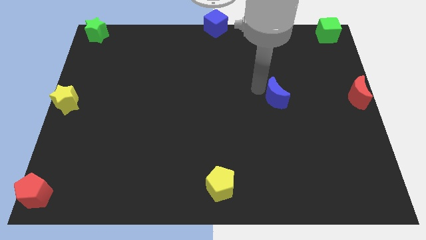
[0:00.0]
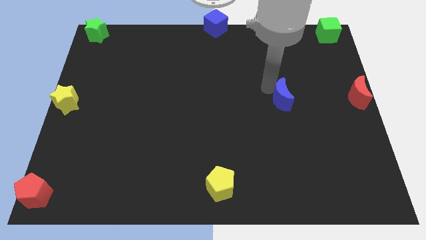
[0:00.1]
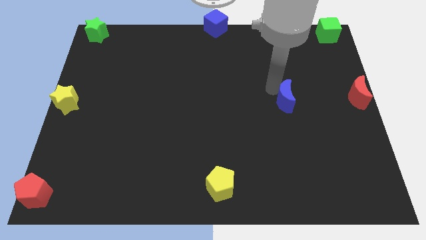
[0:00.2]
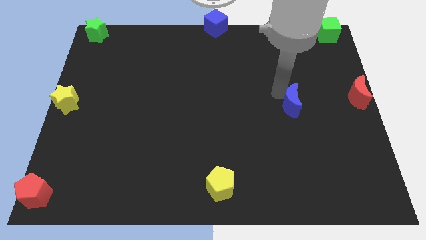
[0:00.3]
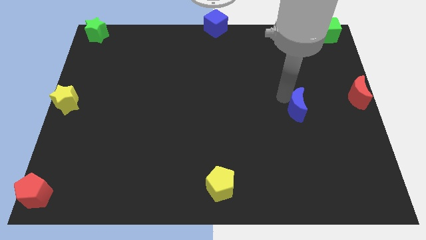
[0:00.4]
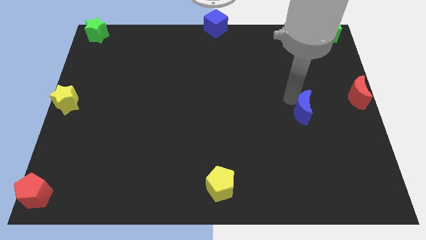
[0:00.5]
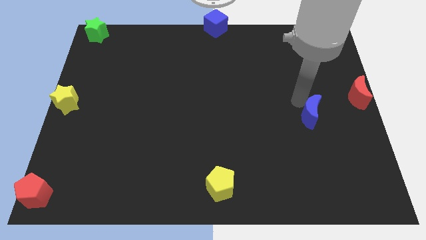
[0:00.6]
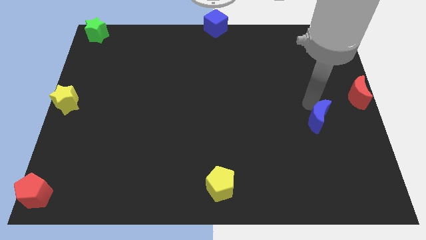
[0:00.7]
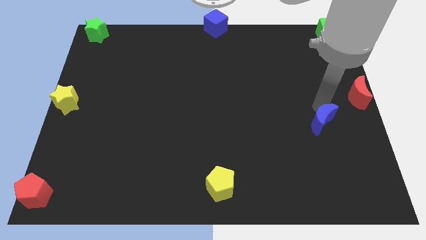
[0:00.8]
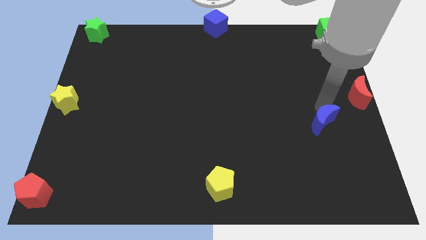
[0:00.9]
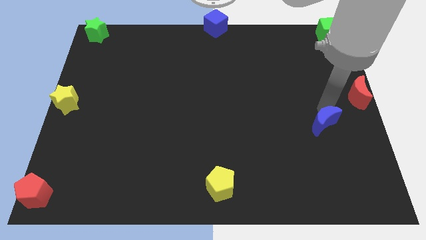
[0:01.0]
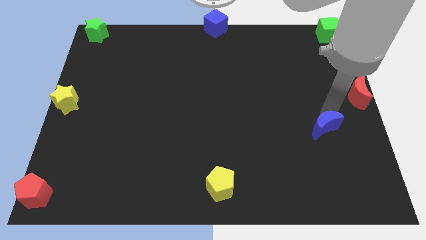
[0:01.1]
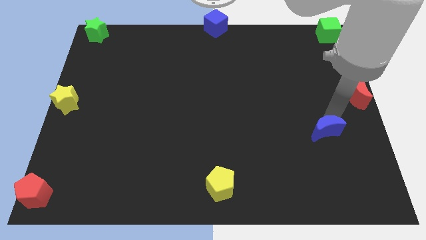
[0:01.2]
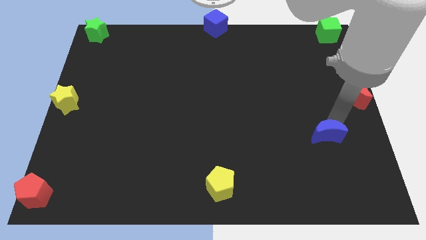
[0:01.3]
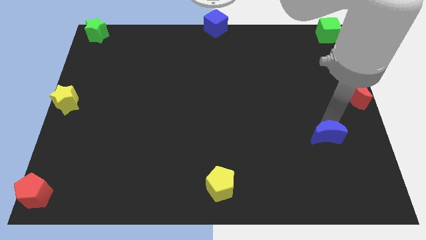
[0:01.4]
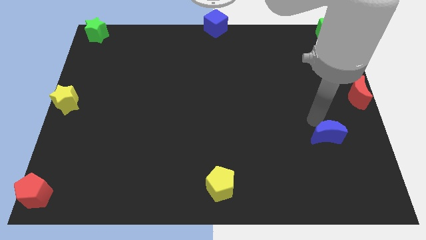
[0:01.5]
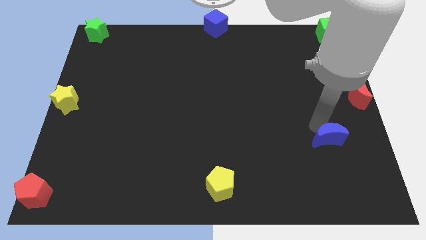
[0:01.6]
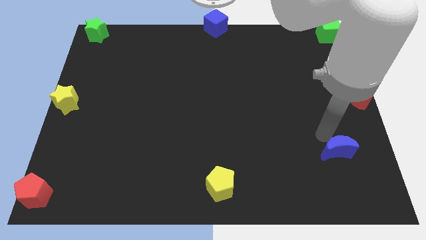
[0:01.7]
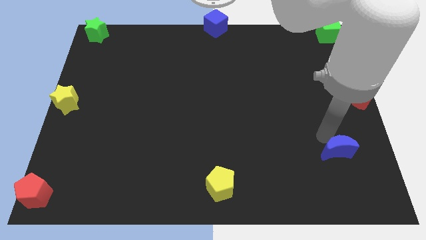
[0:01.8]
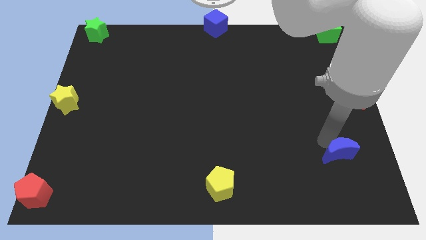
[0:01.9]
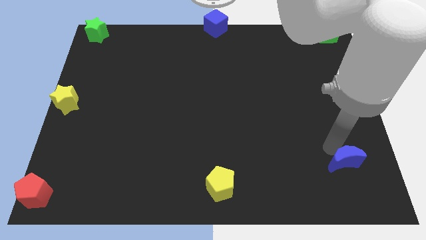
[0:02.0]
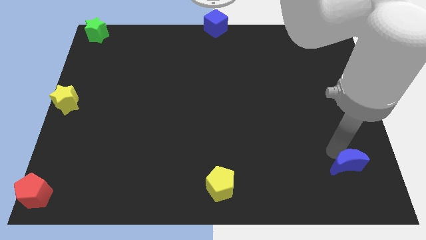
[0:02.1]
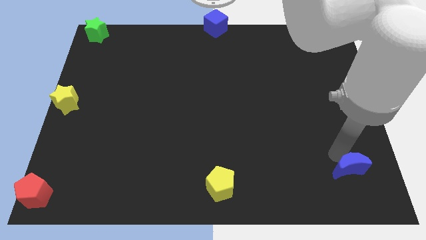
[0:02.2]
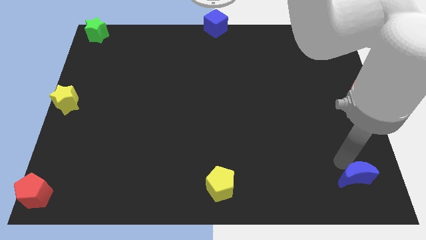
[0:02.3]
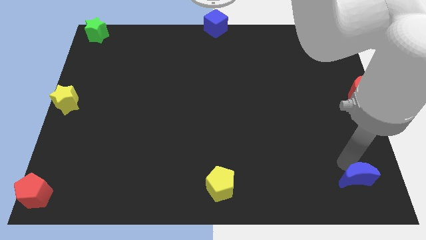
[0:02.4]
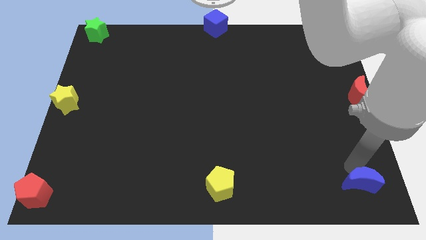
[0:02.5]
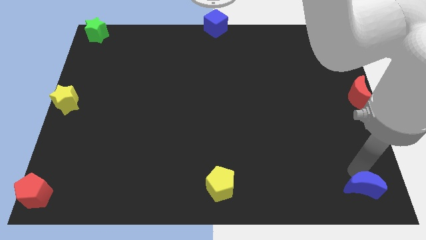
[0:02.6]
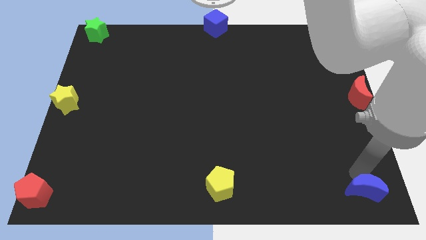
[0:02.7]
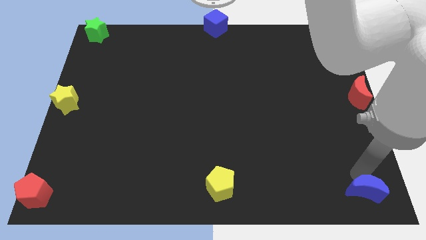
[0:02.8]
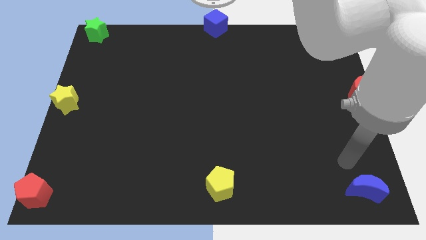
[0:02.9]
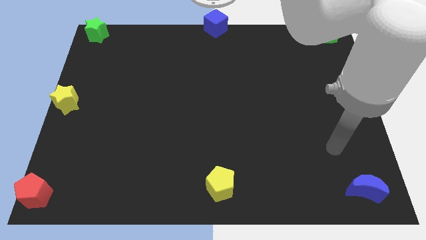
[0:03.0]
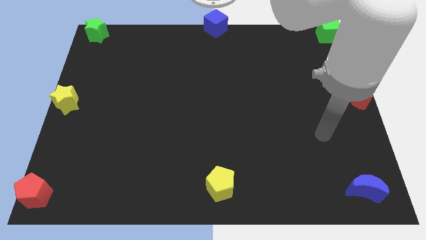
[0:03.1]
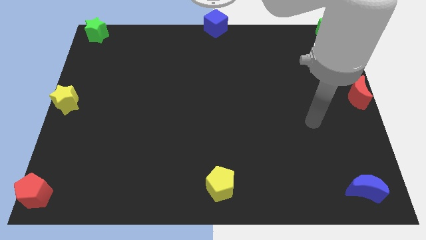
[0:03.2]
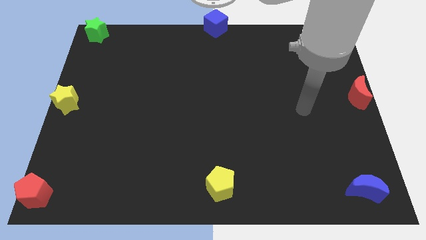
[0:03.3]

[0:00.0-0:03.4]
place the blue moon to the right of the yellow pentagon

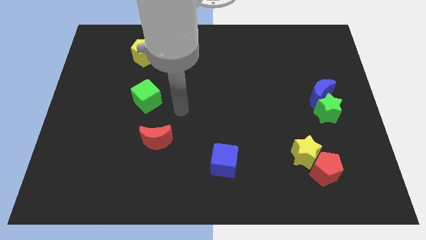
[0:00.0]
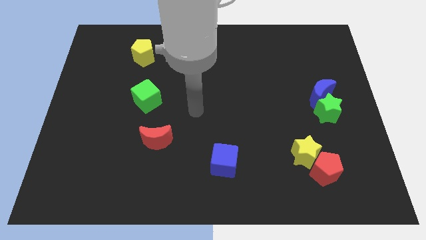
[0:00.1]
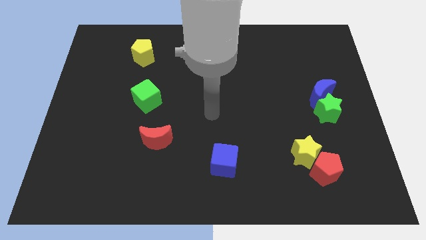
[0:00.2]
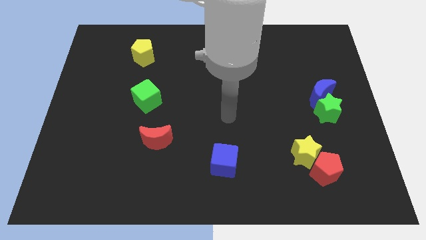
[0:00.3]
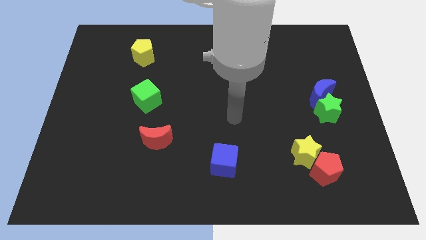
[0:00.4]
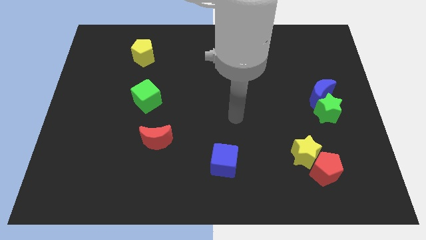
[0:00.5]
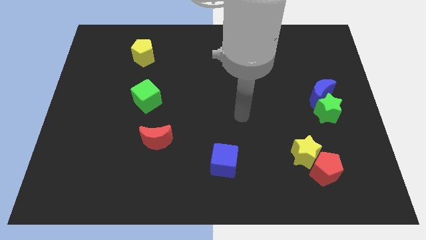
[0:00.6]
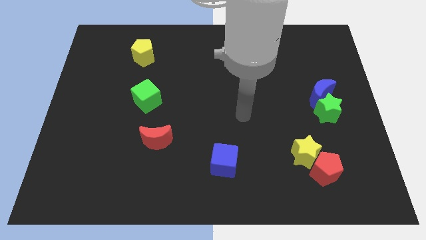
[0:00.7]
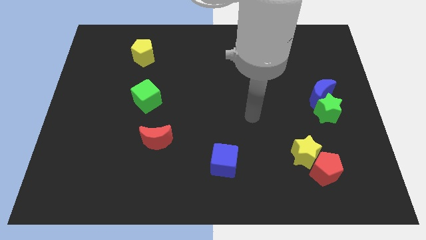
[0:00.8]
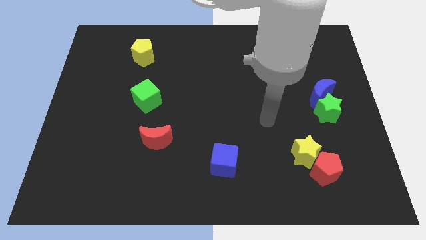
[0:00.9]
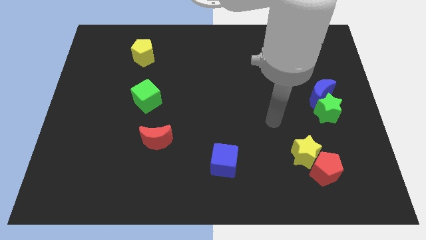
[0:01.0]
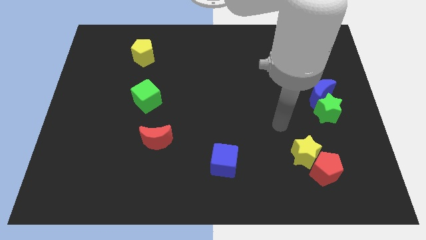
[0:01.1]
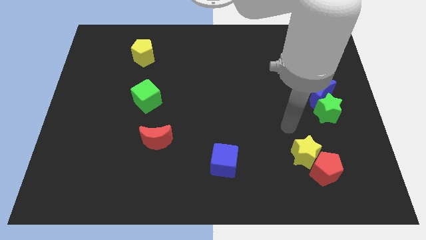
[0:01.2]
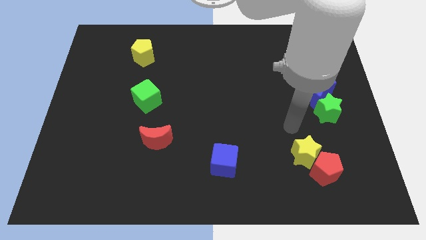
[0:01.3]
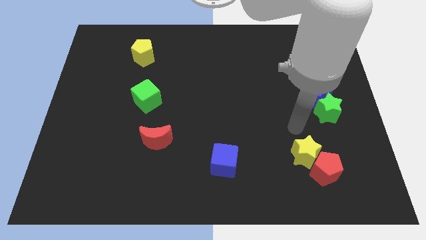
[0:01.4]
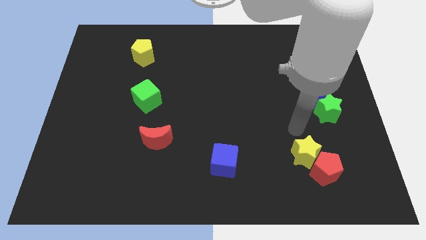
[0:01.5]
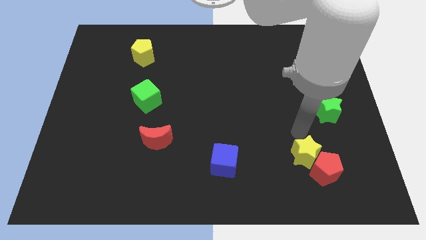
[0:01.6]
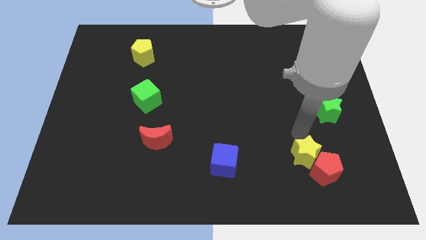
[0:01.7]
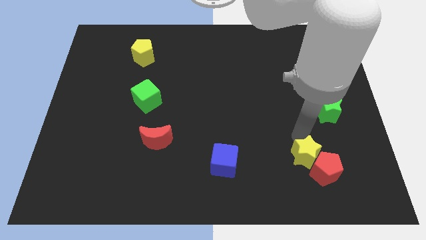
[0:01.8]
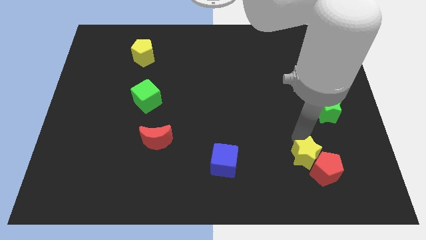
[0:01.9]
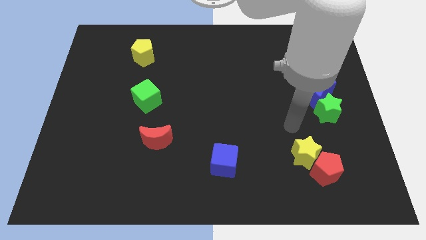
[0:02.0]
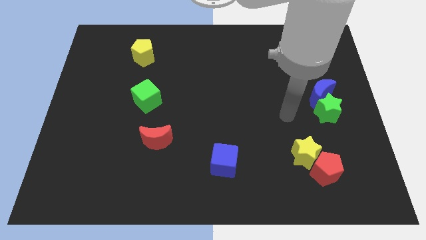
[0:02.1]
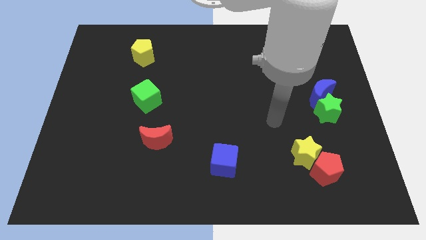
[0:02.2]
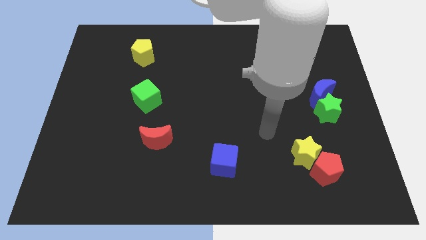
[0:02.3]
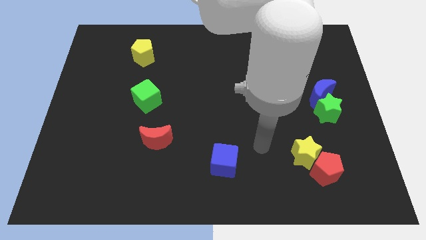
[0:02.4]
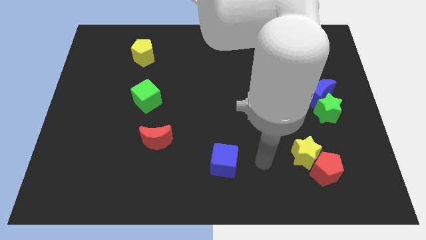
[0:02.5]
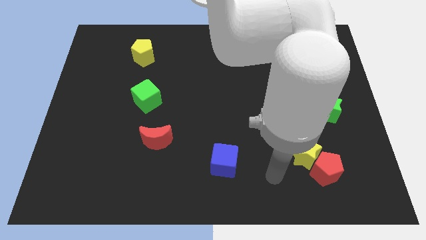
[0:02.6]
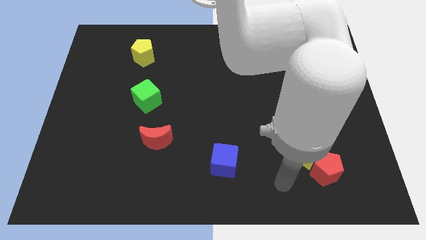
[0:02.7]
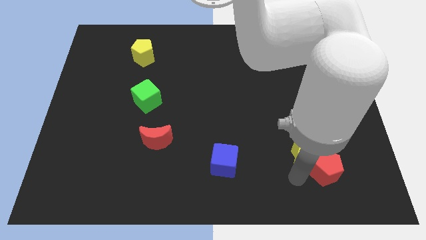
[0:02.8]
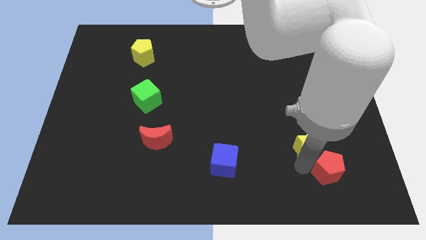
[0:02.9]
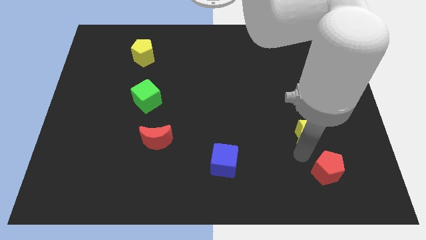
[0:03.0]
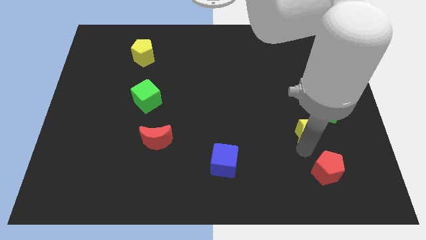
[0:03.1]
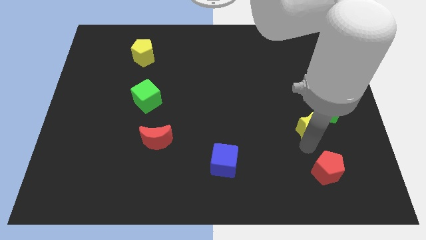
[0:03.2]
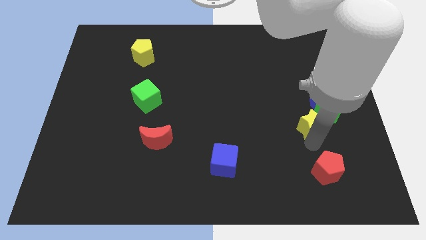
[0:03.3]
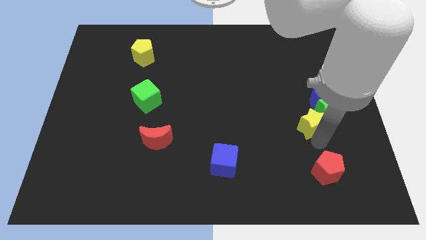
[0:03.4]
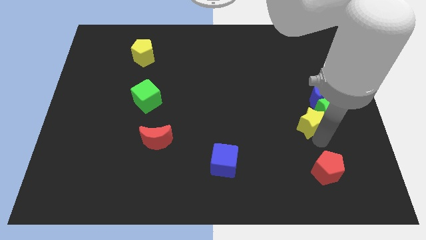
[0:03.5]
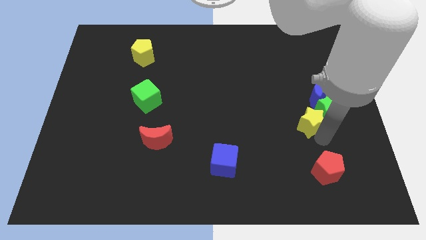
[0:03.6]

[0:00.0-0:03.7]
separate yellow star from red pentagon

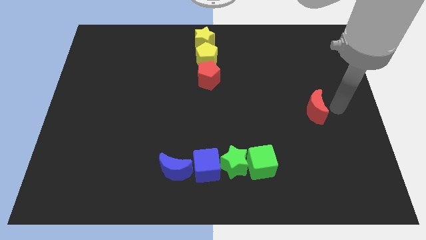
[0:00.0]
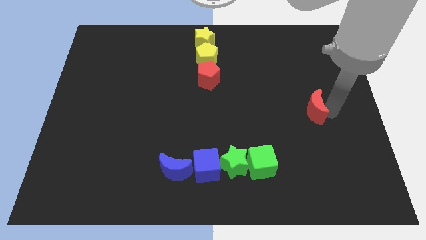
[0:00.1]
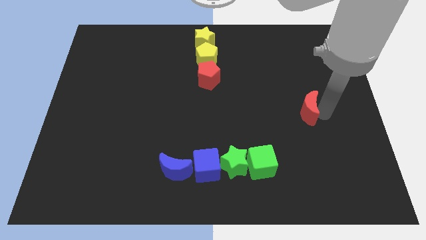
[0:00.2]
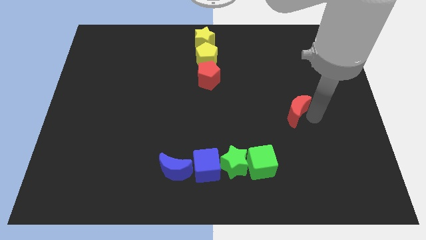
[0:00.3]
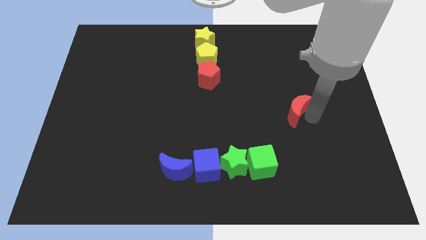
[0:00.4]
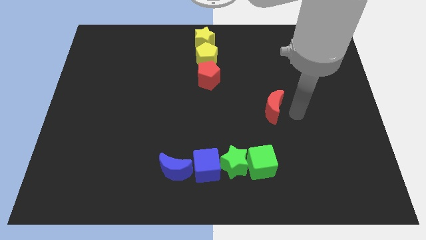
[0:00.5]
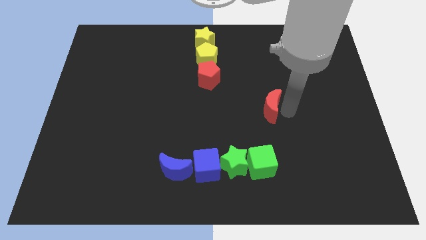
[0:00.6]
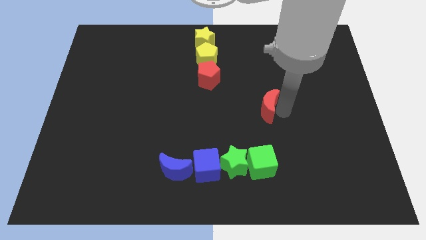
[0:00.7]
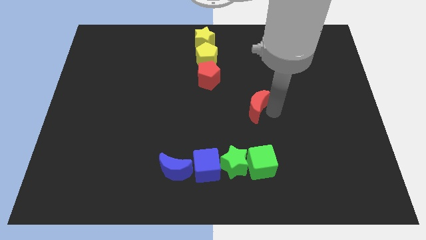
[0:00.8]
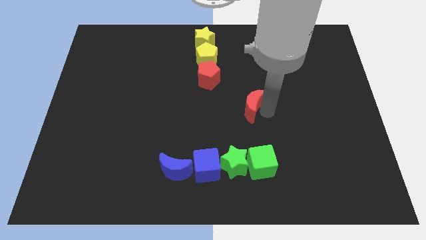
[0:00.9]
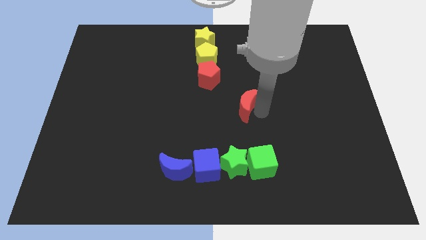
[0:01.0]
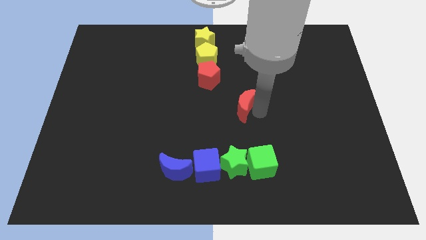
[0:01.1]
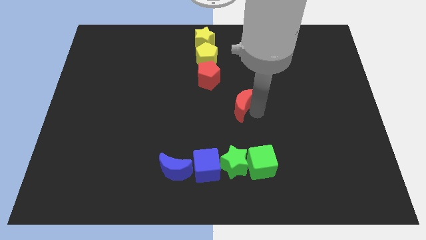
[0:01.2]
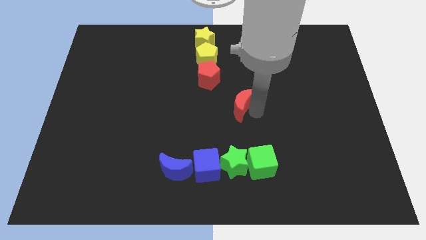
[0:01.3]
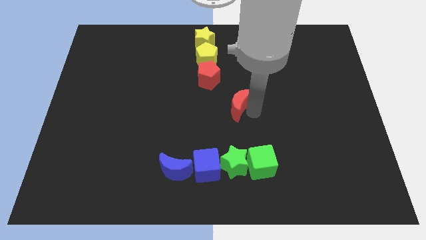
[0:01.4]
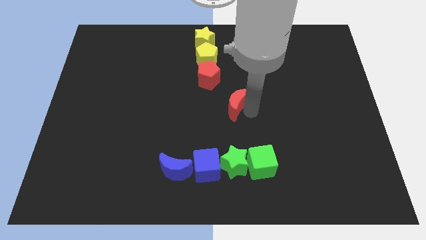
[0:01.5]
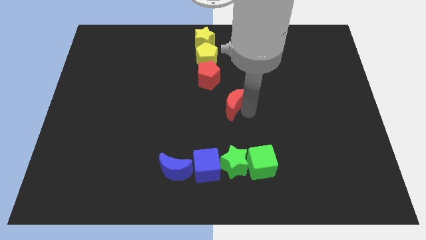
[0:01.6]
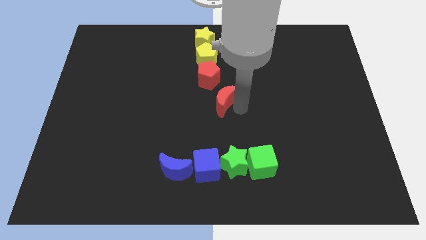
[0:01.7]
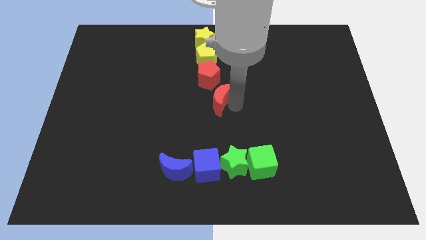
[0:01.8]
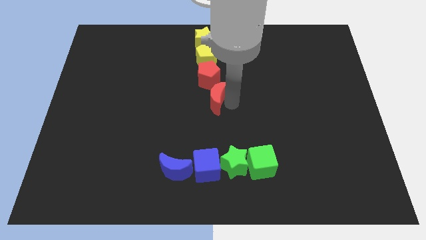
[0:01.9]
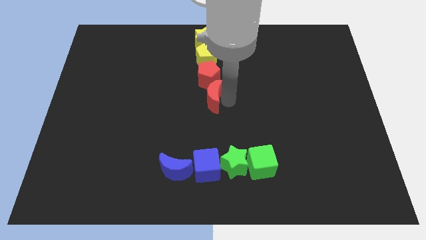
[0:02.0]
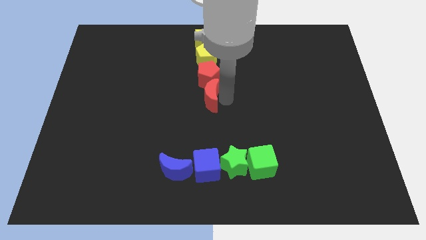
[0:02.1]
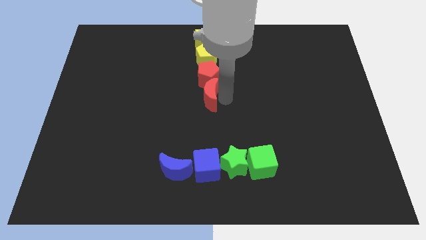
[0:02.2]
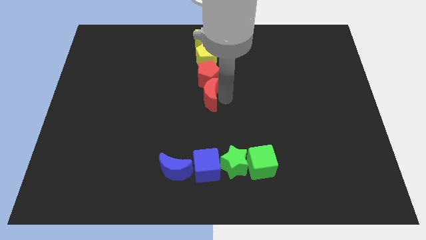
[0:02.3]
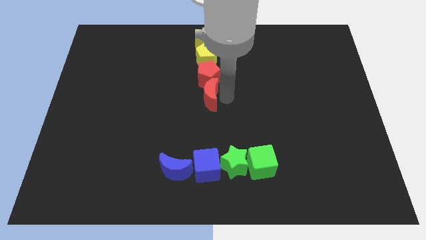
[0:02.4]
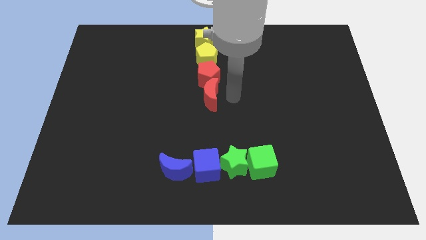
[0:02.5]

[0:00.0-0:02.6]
put the red crescent below the red pentagon to form a vertical line of blocks
